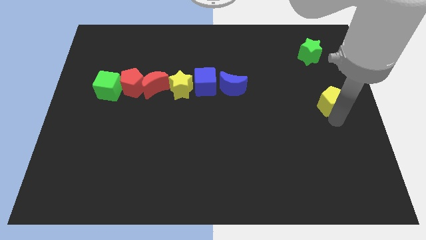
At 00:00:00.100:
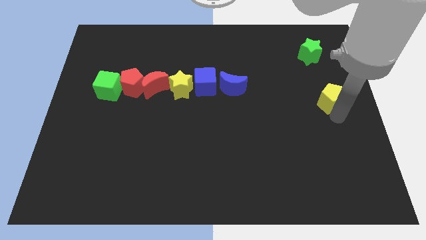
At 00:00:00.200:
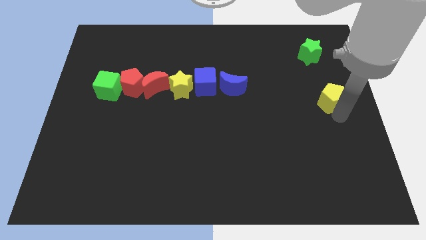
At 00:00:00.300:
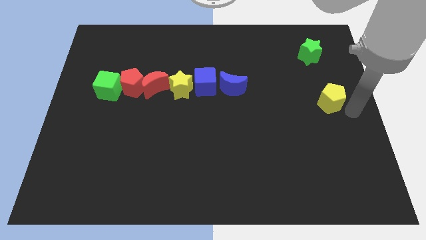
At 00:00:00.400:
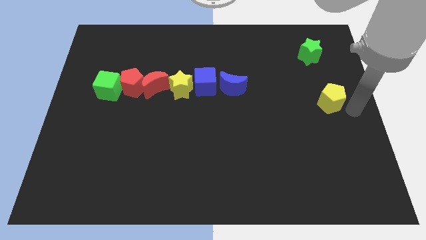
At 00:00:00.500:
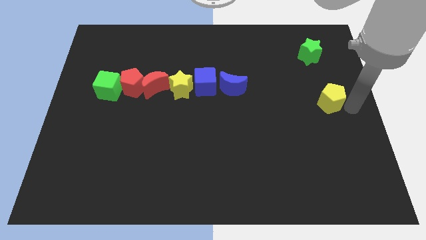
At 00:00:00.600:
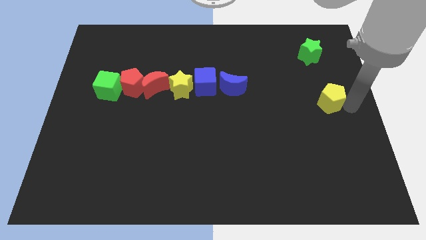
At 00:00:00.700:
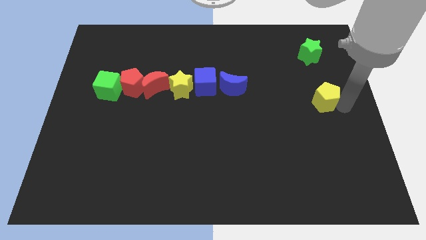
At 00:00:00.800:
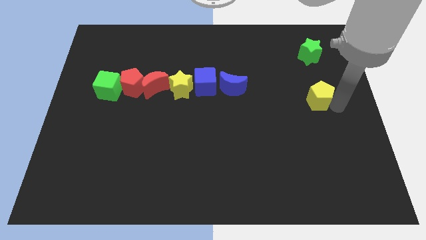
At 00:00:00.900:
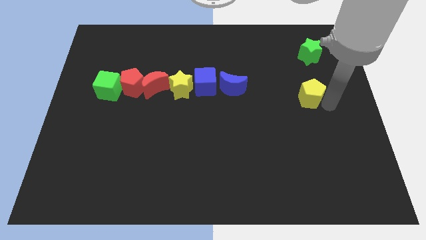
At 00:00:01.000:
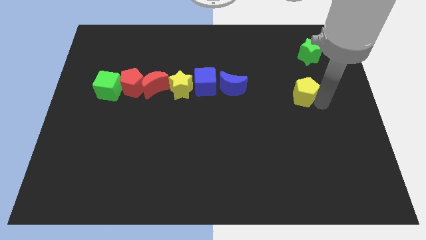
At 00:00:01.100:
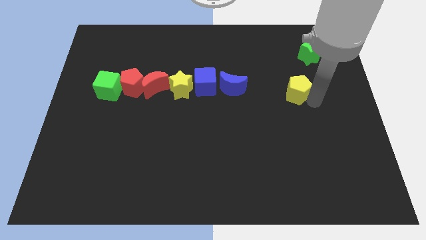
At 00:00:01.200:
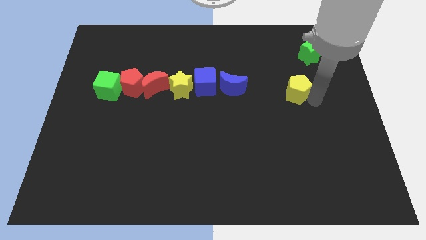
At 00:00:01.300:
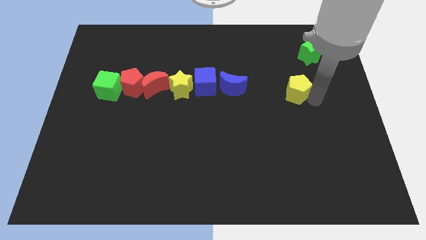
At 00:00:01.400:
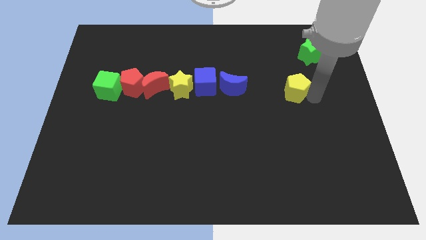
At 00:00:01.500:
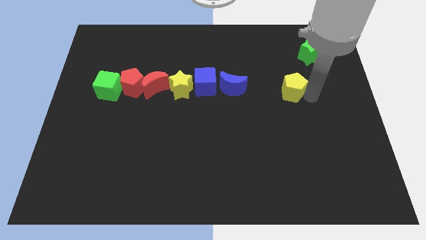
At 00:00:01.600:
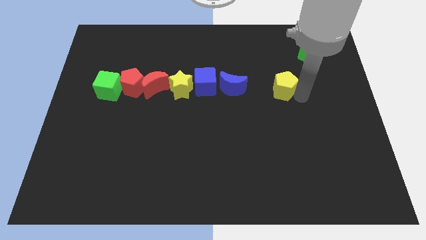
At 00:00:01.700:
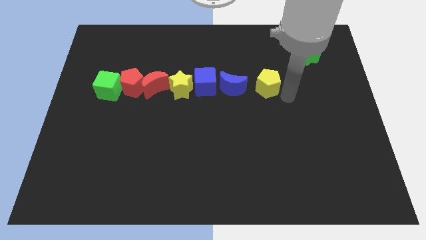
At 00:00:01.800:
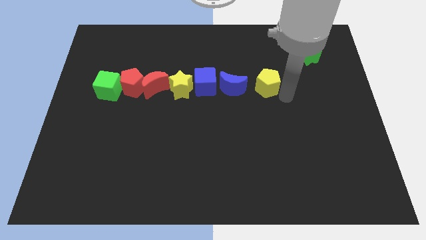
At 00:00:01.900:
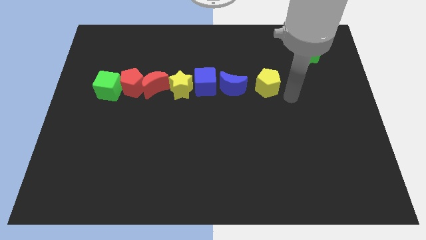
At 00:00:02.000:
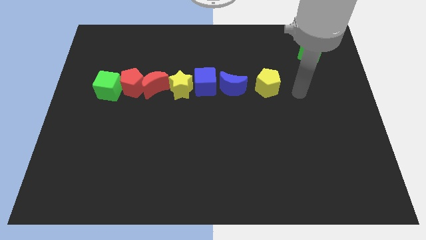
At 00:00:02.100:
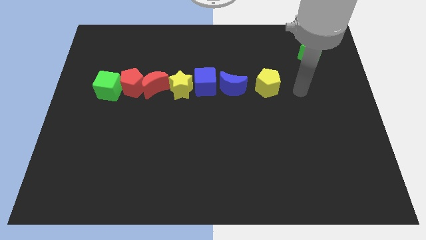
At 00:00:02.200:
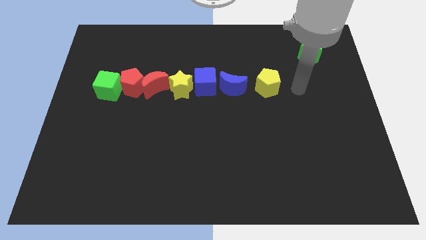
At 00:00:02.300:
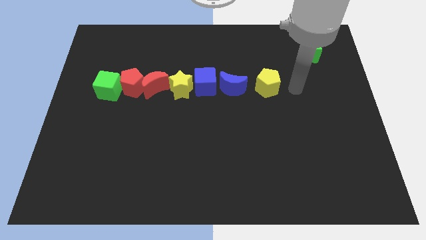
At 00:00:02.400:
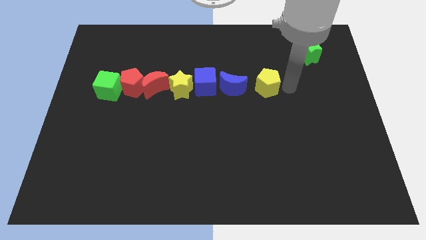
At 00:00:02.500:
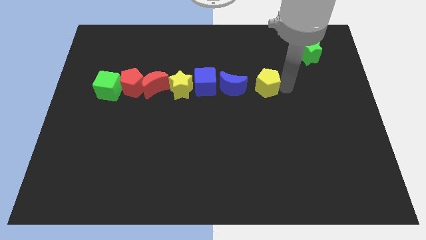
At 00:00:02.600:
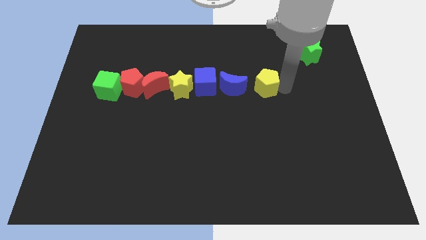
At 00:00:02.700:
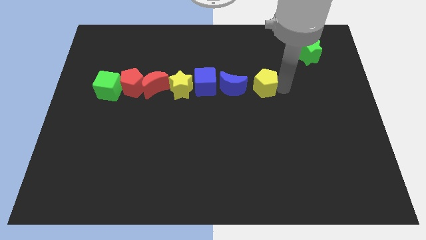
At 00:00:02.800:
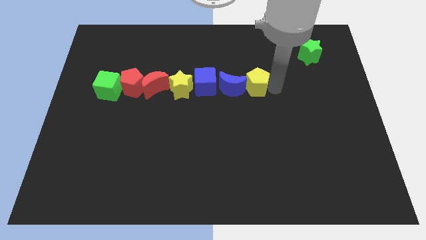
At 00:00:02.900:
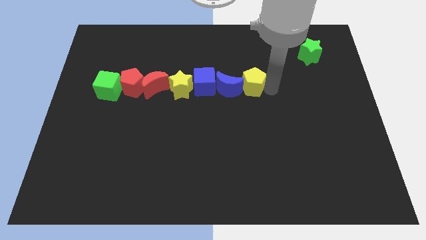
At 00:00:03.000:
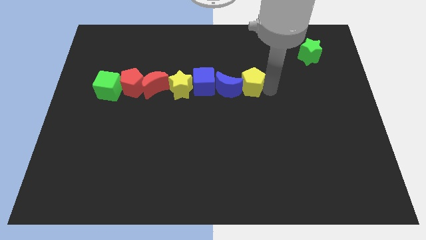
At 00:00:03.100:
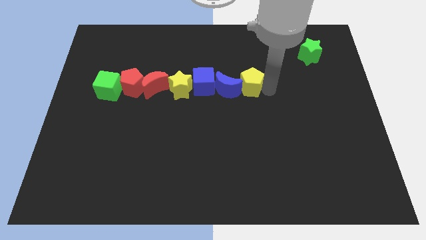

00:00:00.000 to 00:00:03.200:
move the yellow pentagon to the right side of the blue moon

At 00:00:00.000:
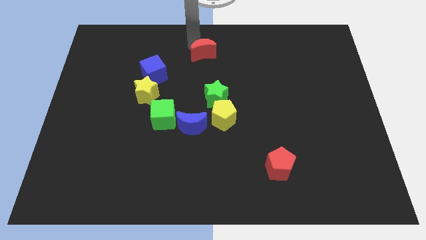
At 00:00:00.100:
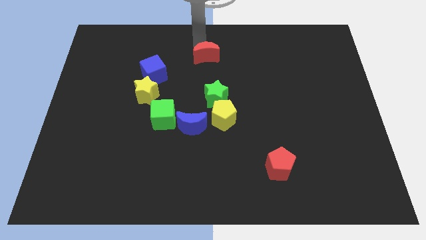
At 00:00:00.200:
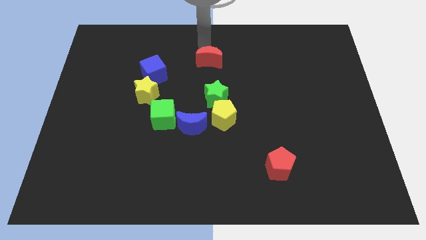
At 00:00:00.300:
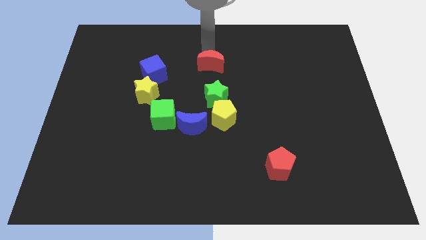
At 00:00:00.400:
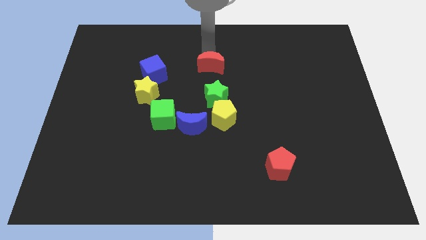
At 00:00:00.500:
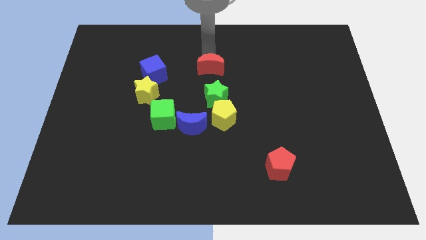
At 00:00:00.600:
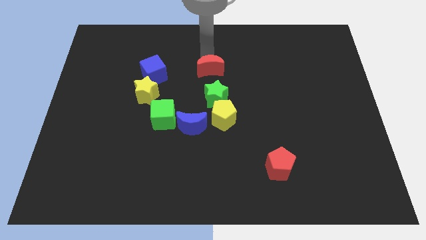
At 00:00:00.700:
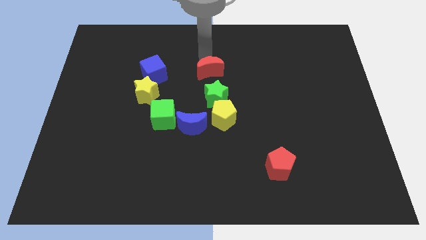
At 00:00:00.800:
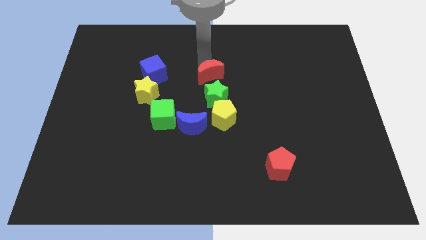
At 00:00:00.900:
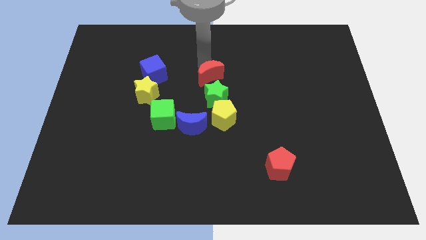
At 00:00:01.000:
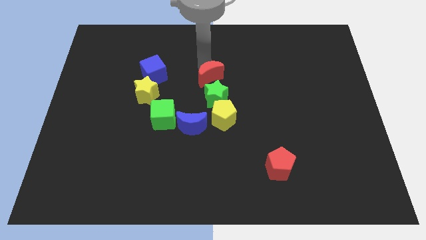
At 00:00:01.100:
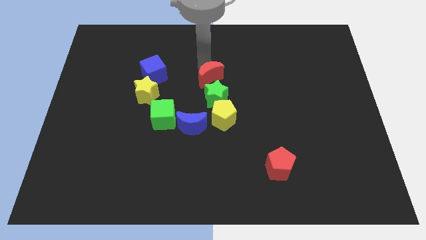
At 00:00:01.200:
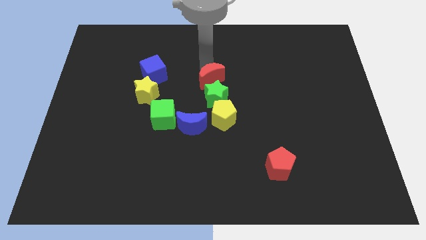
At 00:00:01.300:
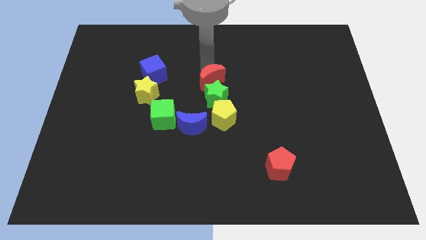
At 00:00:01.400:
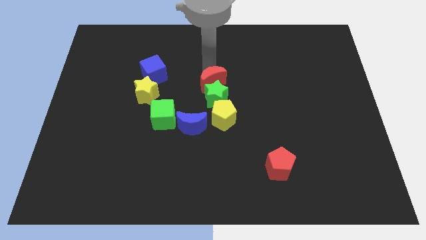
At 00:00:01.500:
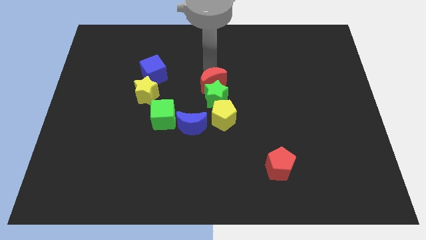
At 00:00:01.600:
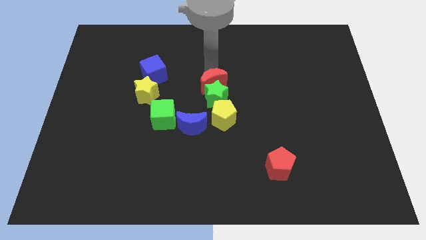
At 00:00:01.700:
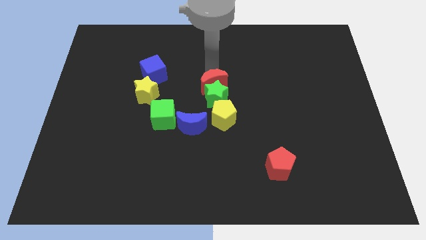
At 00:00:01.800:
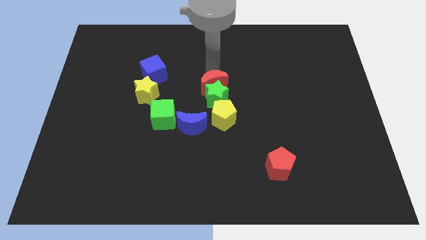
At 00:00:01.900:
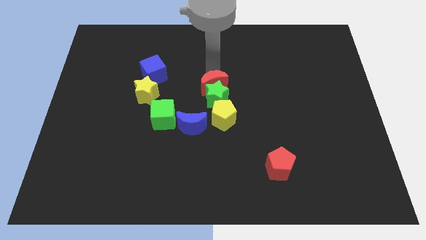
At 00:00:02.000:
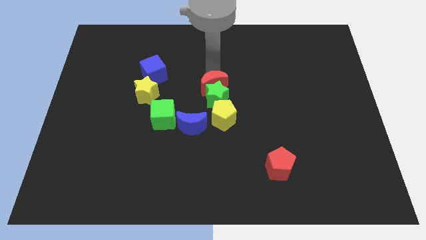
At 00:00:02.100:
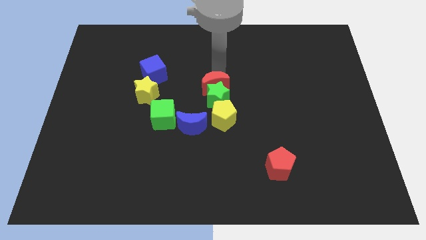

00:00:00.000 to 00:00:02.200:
move the red crescent into the green star

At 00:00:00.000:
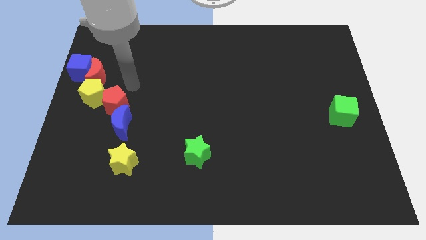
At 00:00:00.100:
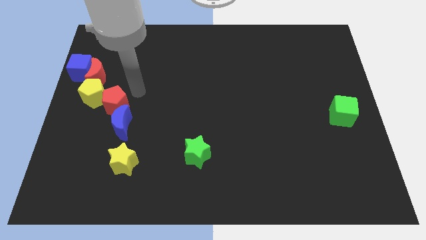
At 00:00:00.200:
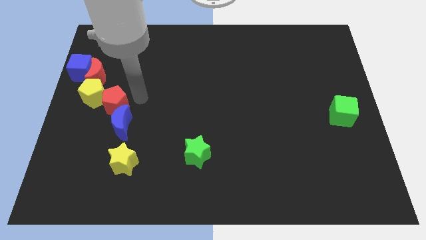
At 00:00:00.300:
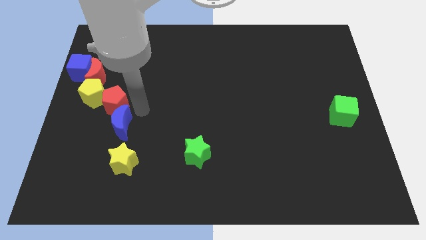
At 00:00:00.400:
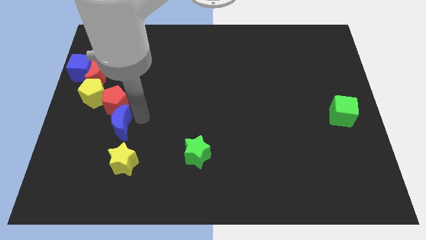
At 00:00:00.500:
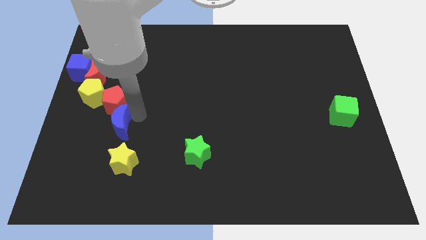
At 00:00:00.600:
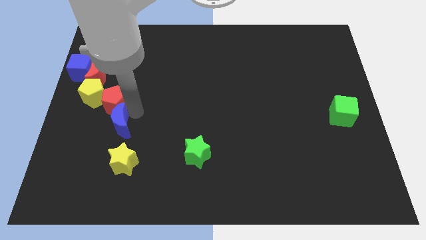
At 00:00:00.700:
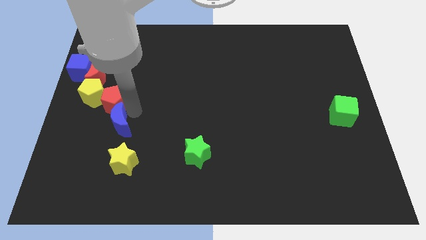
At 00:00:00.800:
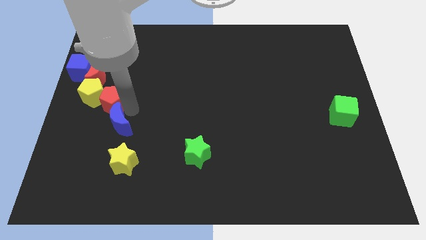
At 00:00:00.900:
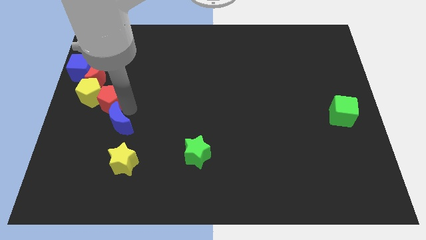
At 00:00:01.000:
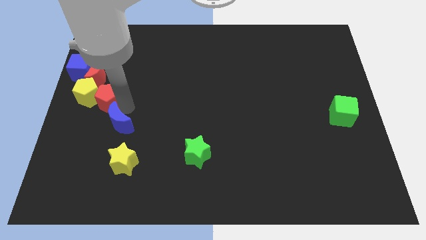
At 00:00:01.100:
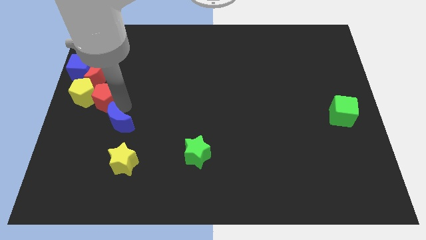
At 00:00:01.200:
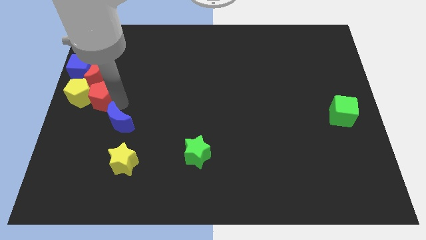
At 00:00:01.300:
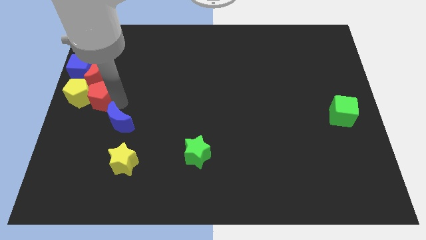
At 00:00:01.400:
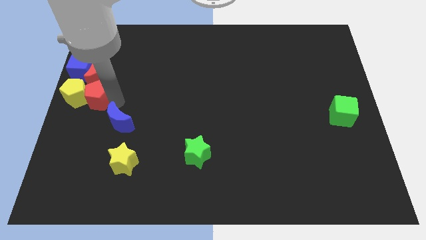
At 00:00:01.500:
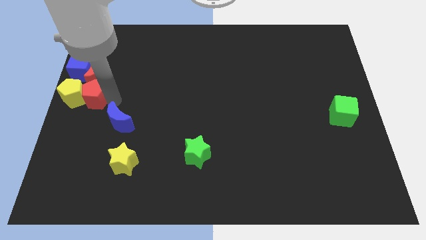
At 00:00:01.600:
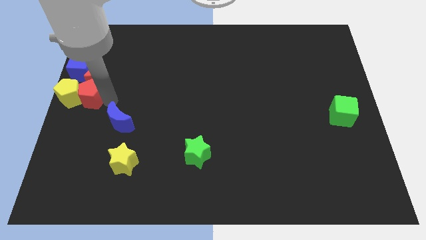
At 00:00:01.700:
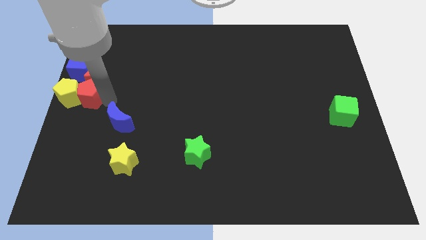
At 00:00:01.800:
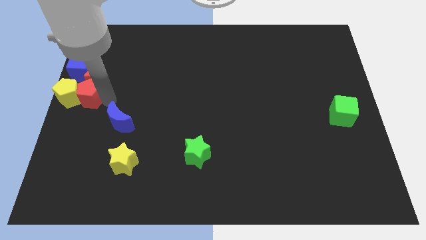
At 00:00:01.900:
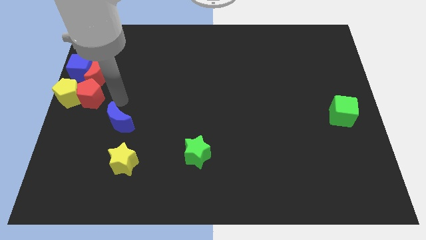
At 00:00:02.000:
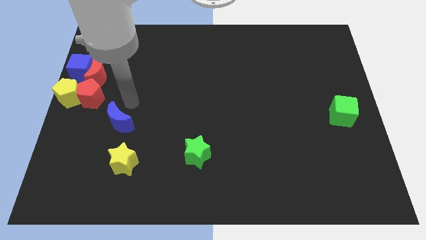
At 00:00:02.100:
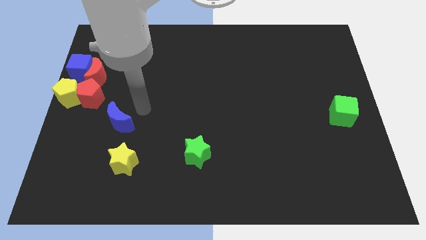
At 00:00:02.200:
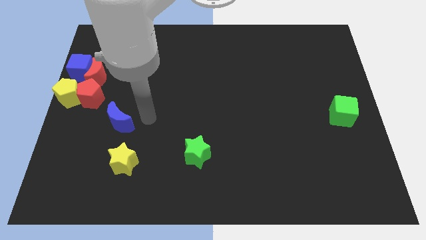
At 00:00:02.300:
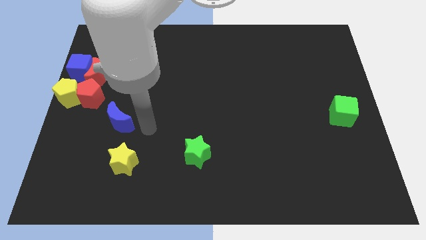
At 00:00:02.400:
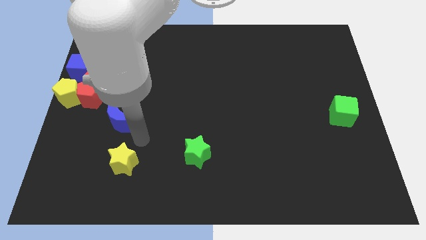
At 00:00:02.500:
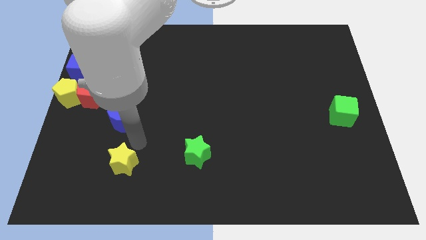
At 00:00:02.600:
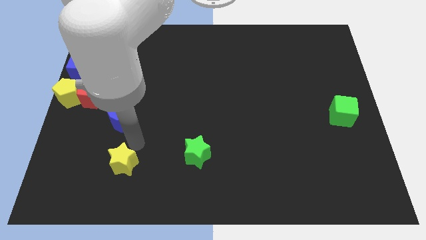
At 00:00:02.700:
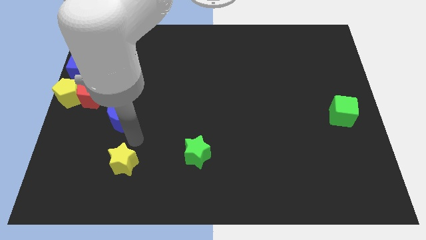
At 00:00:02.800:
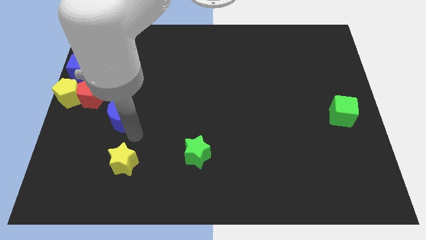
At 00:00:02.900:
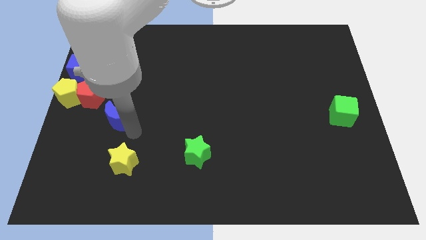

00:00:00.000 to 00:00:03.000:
push the red pentagon slightly to the left

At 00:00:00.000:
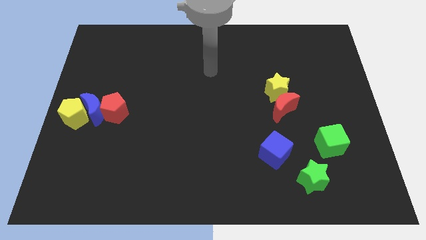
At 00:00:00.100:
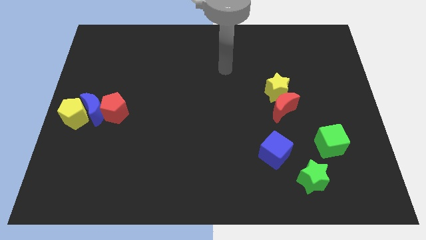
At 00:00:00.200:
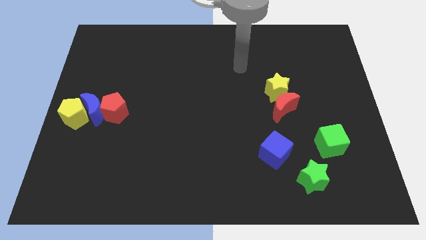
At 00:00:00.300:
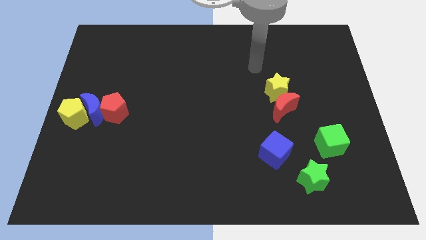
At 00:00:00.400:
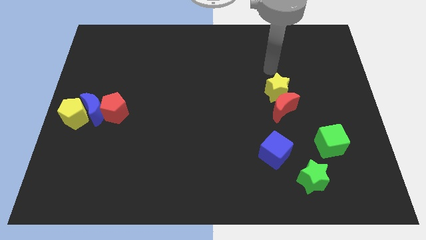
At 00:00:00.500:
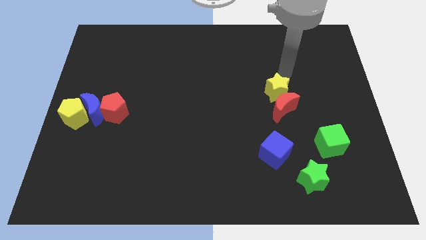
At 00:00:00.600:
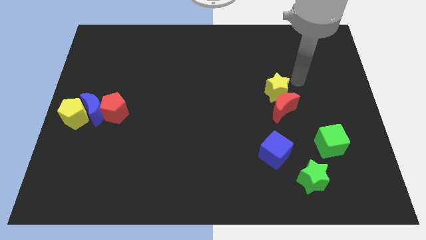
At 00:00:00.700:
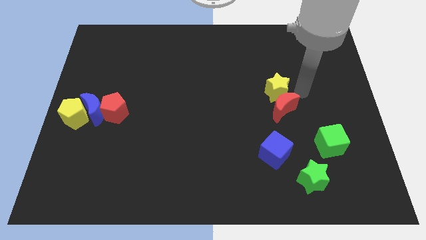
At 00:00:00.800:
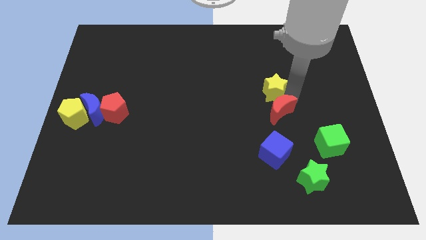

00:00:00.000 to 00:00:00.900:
point your arm to the right side of yellow star
